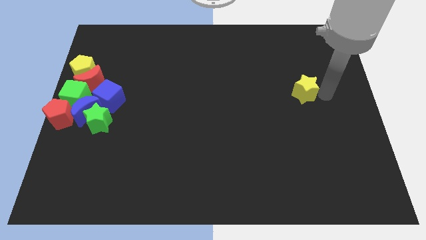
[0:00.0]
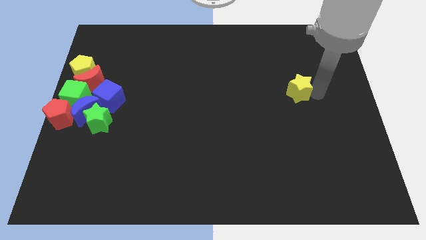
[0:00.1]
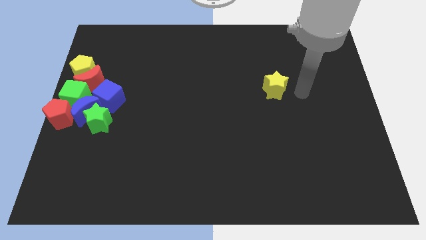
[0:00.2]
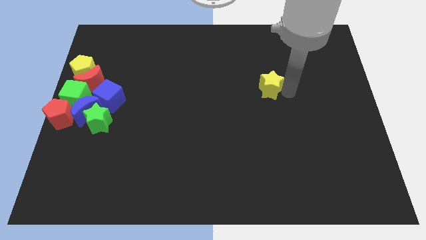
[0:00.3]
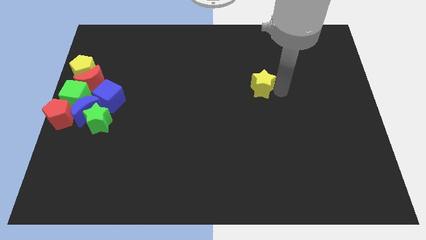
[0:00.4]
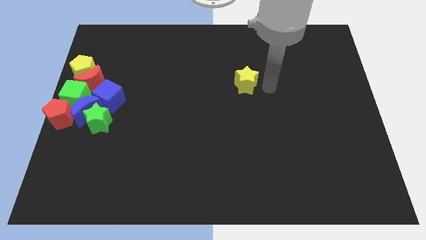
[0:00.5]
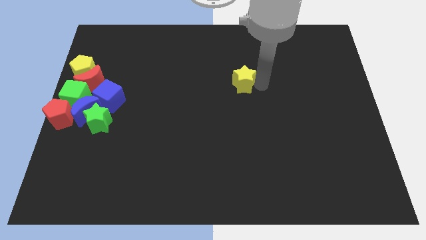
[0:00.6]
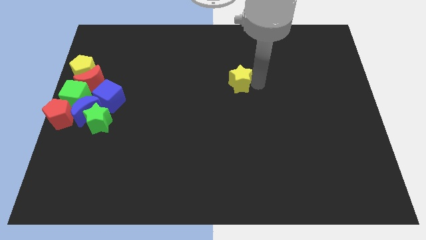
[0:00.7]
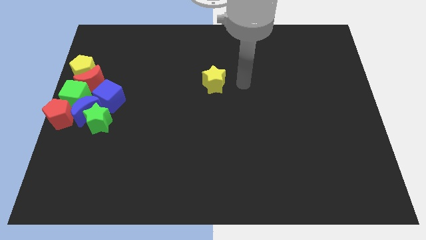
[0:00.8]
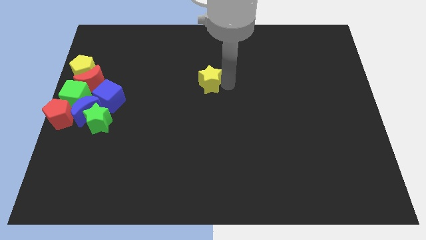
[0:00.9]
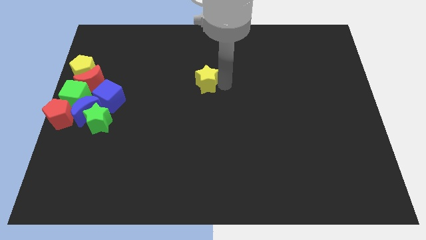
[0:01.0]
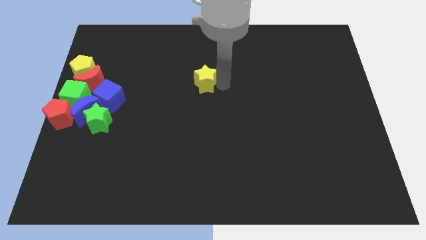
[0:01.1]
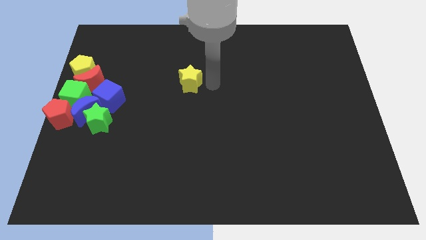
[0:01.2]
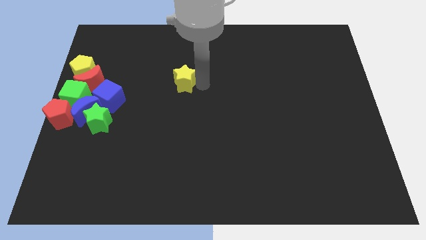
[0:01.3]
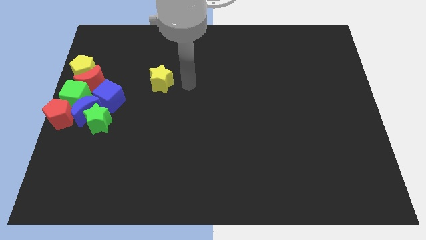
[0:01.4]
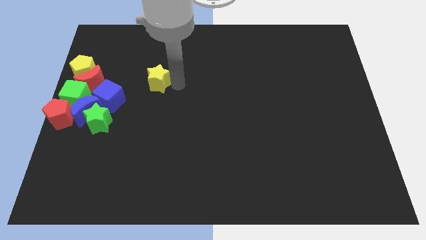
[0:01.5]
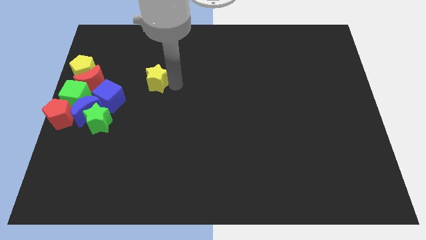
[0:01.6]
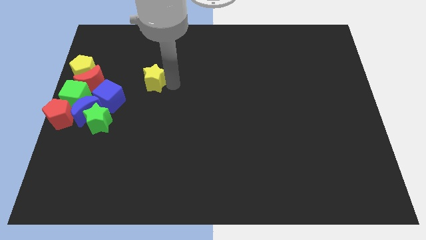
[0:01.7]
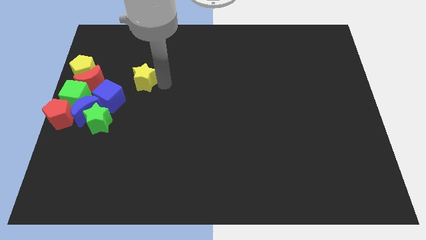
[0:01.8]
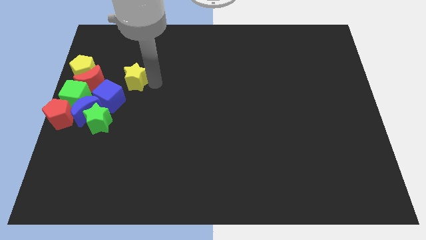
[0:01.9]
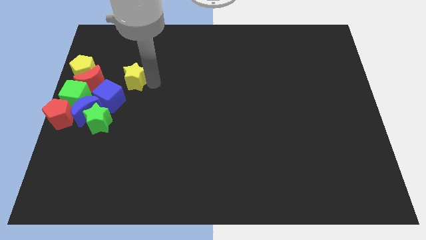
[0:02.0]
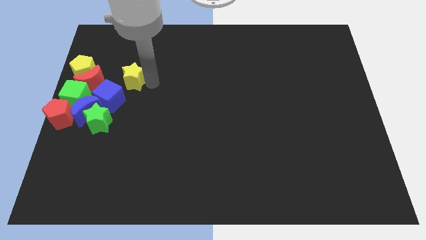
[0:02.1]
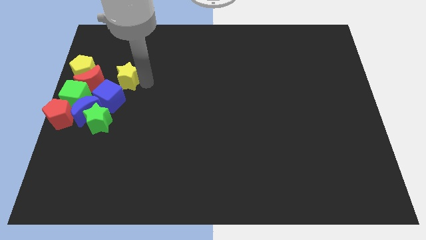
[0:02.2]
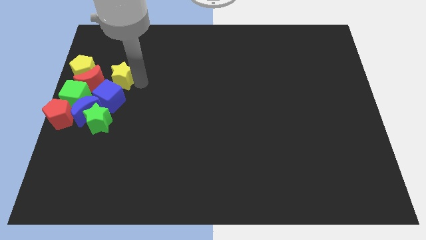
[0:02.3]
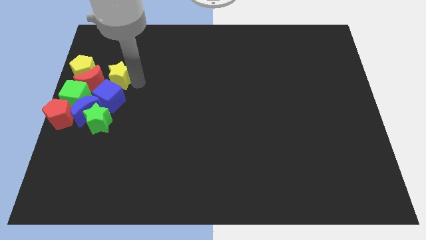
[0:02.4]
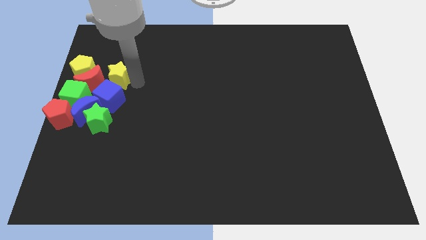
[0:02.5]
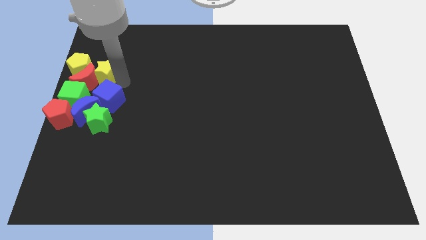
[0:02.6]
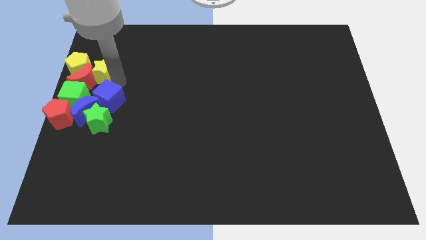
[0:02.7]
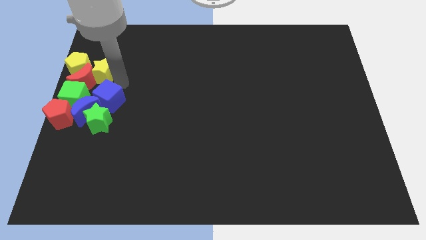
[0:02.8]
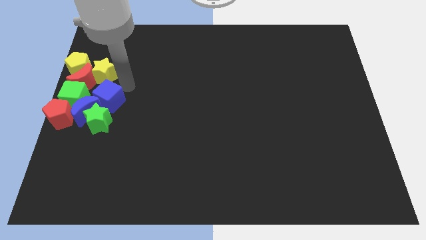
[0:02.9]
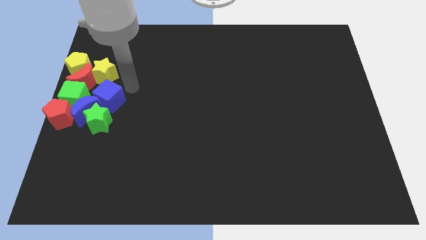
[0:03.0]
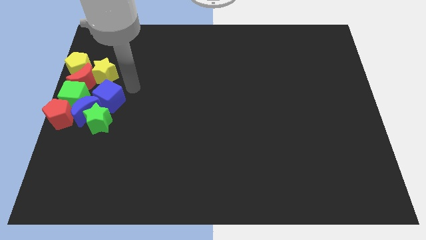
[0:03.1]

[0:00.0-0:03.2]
move the yellow star to the right of the red moon

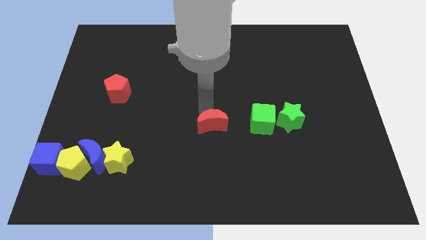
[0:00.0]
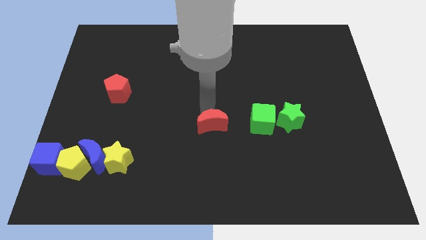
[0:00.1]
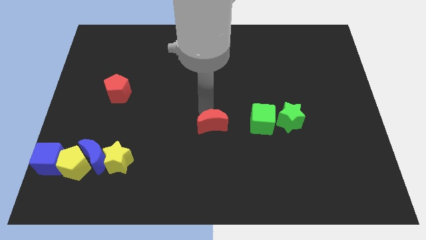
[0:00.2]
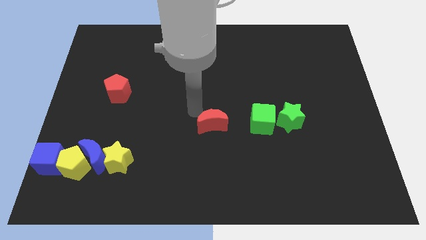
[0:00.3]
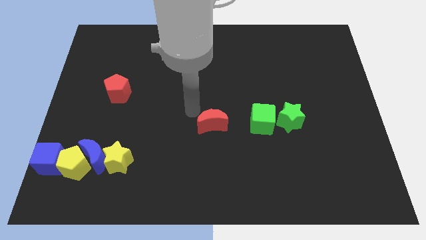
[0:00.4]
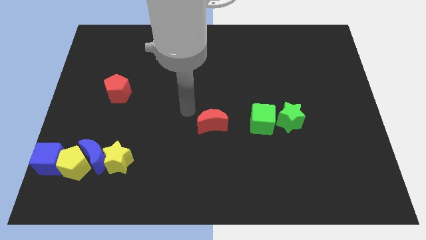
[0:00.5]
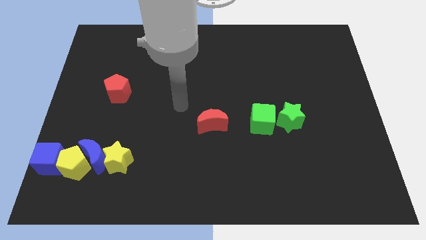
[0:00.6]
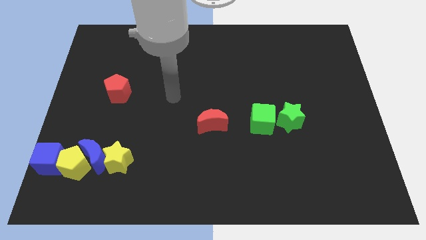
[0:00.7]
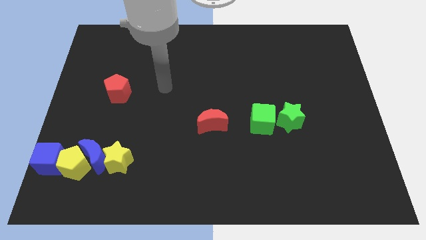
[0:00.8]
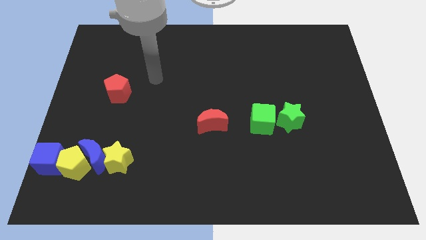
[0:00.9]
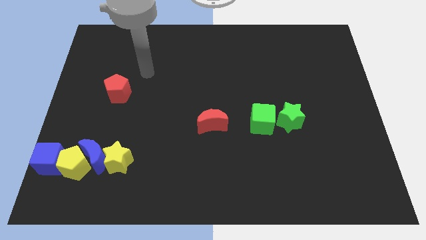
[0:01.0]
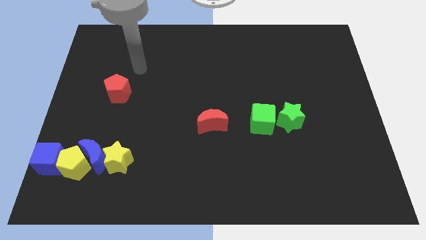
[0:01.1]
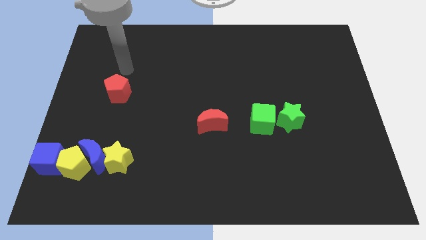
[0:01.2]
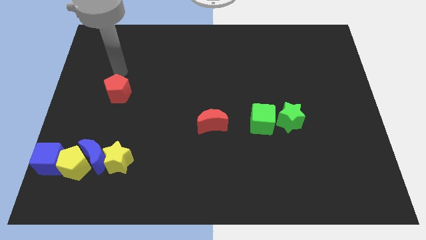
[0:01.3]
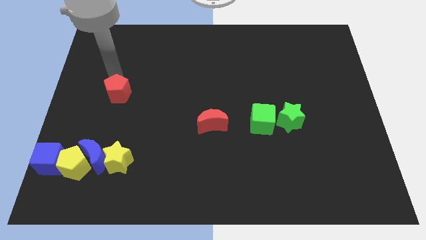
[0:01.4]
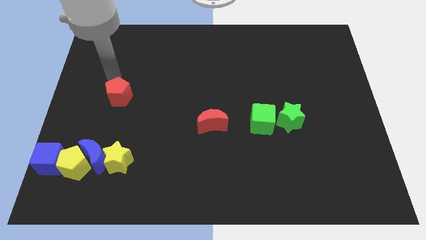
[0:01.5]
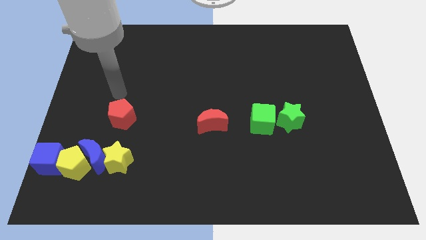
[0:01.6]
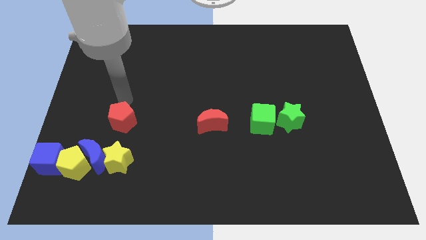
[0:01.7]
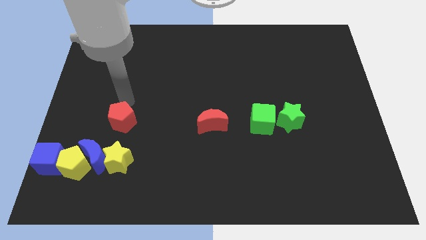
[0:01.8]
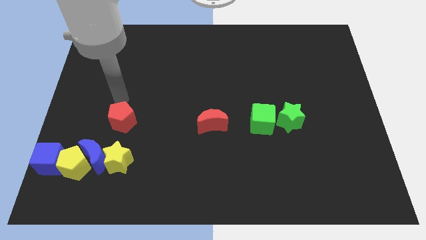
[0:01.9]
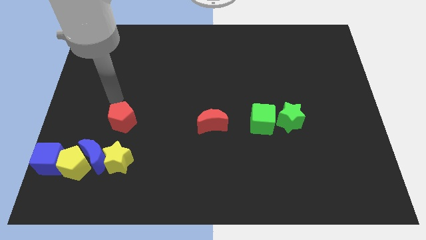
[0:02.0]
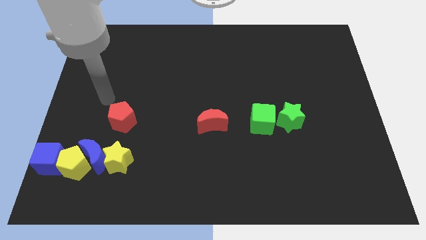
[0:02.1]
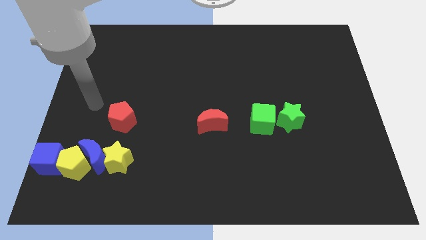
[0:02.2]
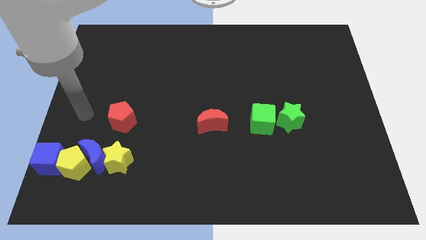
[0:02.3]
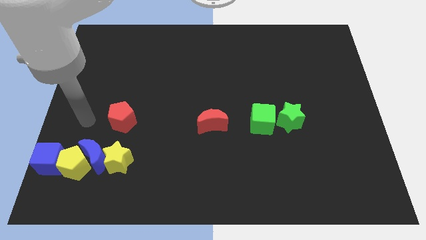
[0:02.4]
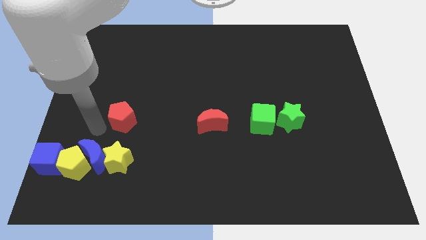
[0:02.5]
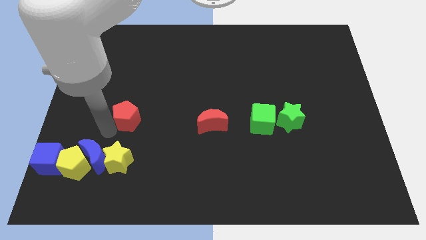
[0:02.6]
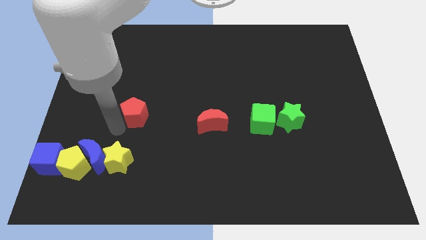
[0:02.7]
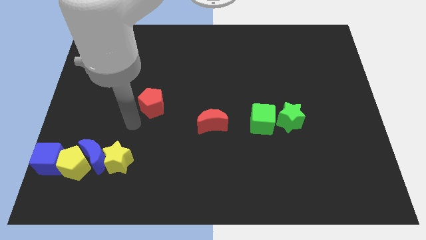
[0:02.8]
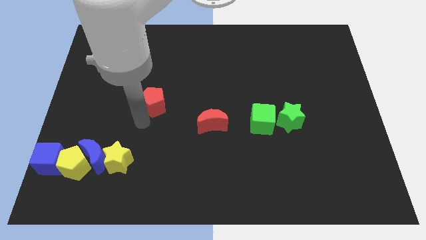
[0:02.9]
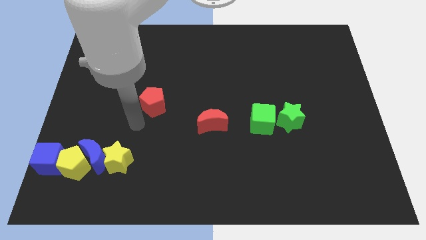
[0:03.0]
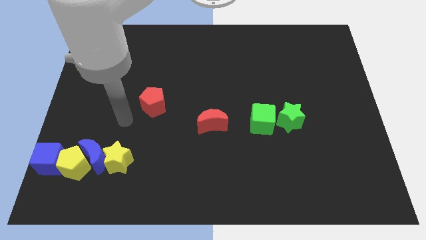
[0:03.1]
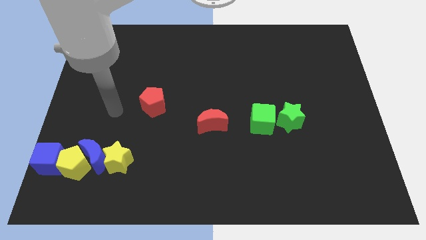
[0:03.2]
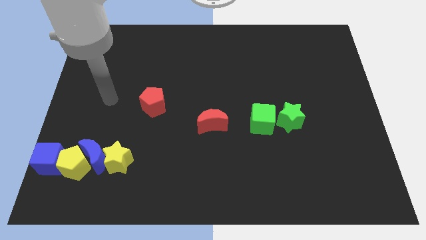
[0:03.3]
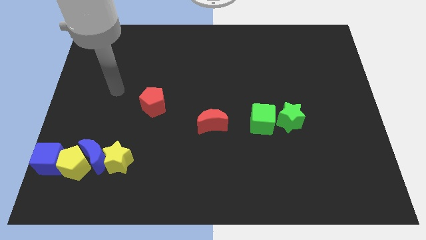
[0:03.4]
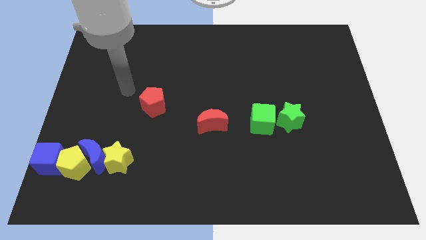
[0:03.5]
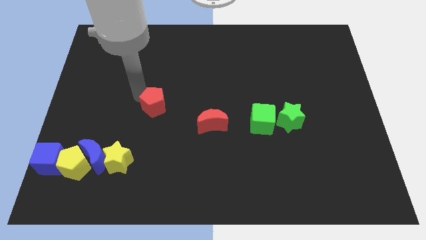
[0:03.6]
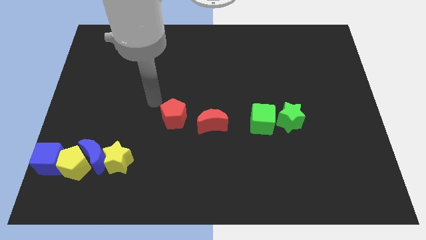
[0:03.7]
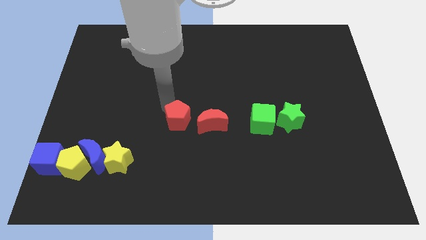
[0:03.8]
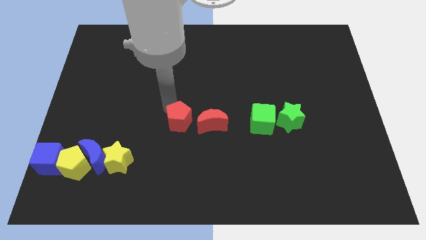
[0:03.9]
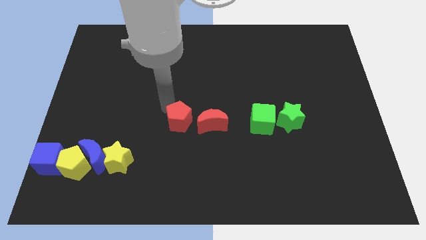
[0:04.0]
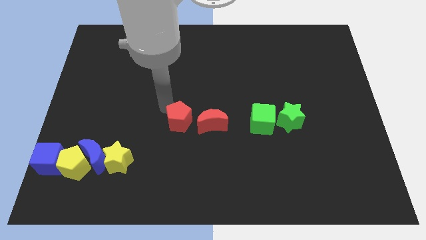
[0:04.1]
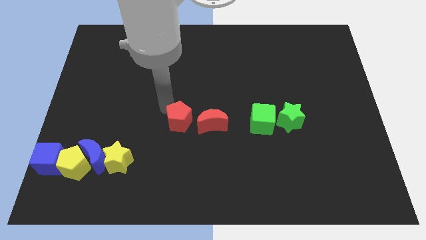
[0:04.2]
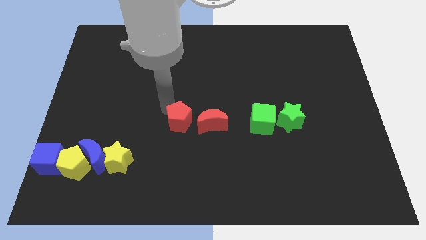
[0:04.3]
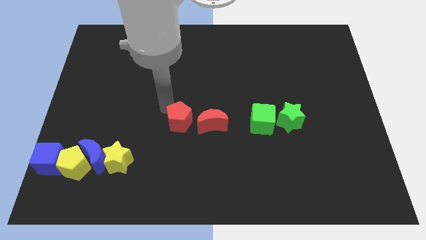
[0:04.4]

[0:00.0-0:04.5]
move red pentagon towards red moon

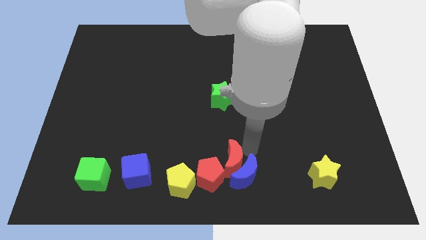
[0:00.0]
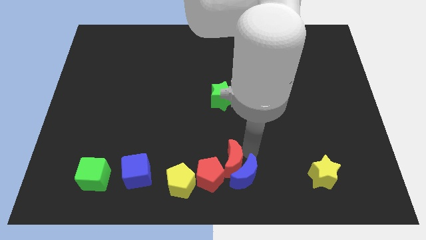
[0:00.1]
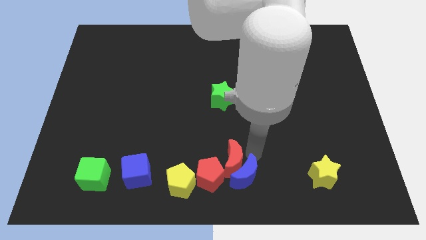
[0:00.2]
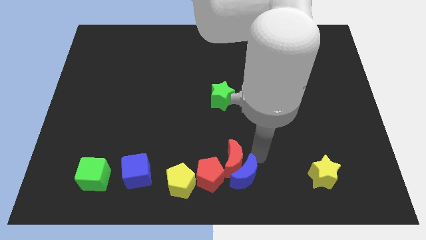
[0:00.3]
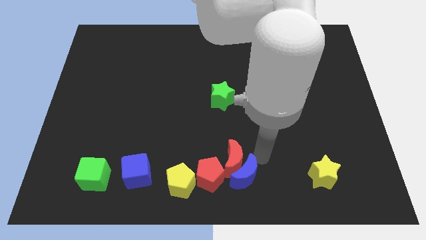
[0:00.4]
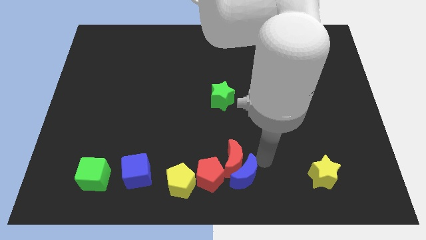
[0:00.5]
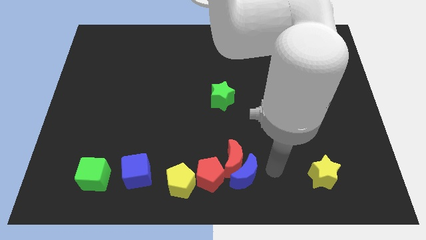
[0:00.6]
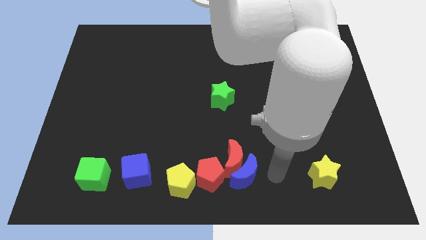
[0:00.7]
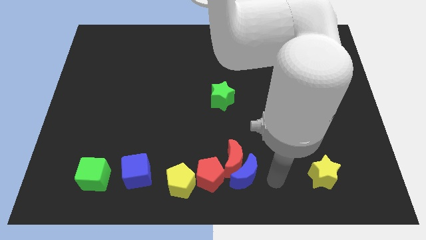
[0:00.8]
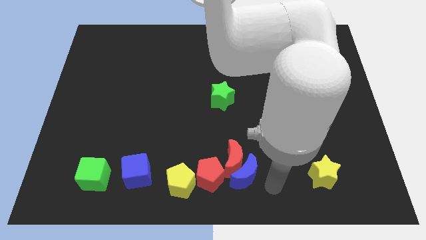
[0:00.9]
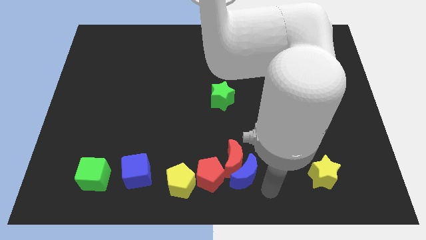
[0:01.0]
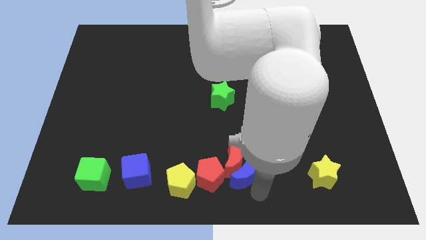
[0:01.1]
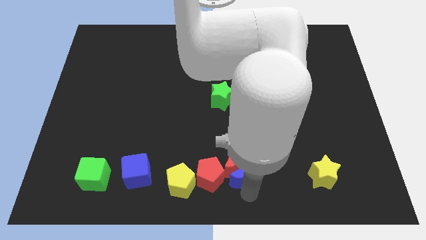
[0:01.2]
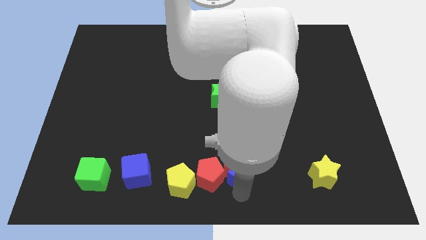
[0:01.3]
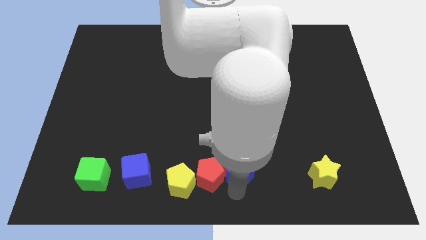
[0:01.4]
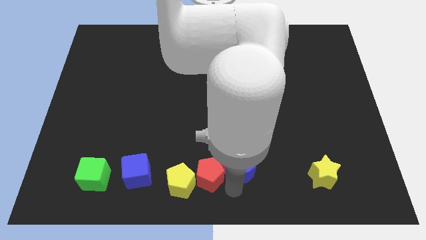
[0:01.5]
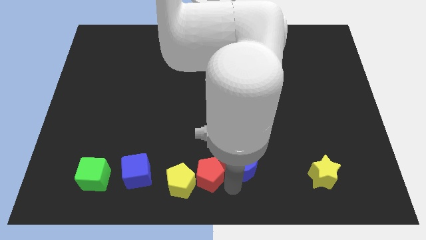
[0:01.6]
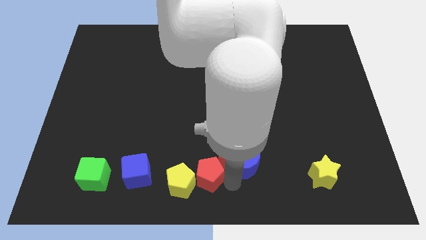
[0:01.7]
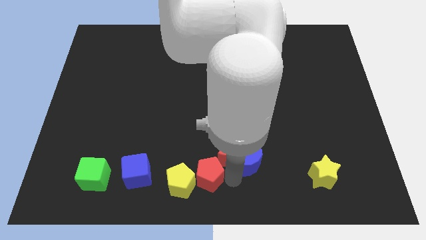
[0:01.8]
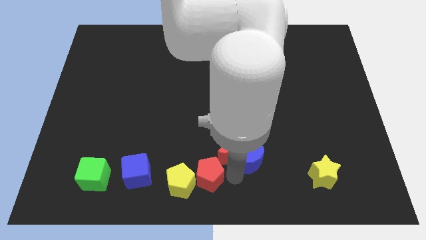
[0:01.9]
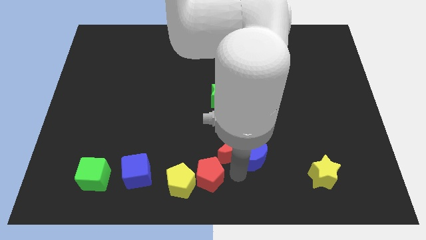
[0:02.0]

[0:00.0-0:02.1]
push the blue crescent slightly to the top
